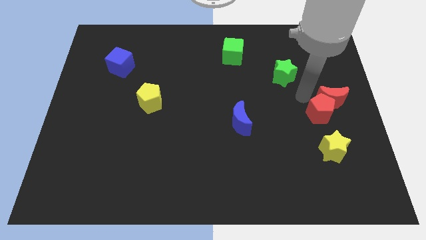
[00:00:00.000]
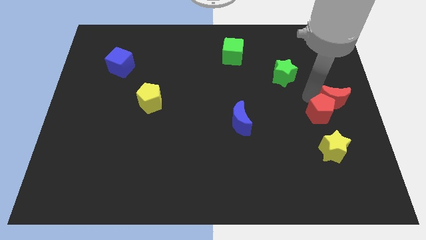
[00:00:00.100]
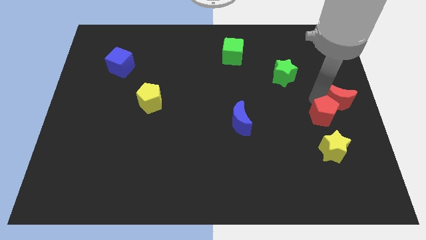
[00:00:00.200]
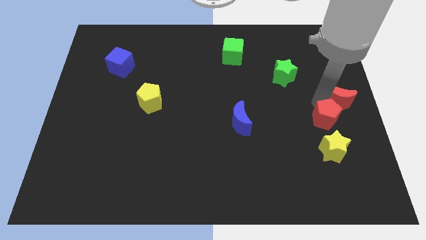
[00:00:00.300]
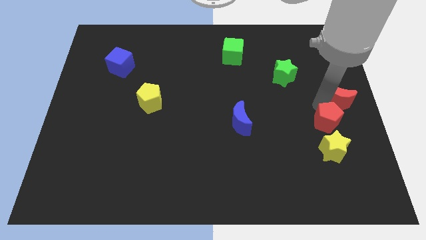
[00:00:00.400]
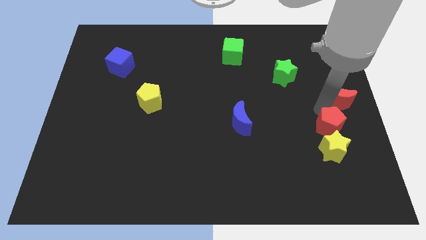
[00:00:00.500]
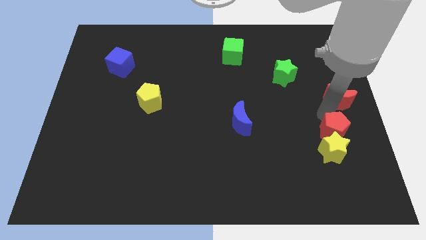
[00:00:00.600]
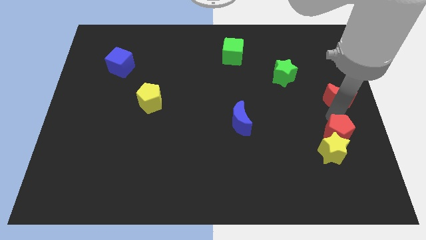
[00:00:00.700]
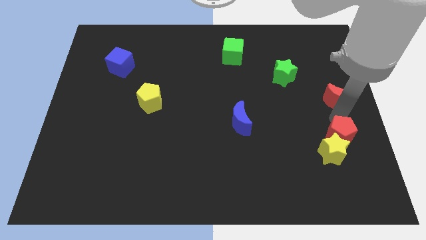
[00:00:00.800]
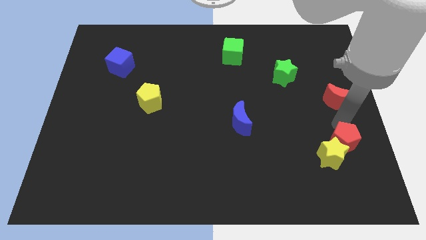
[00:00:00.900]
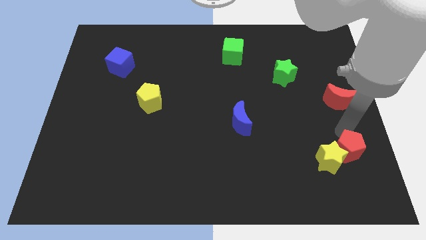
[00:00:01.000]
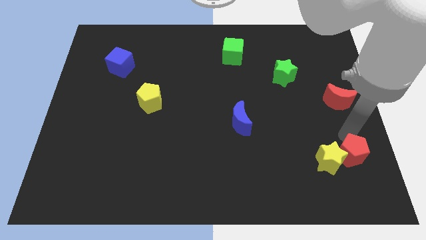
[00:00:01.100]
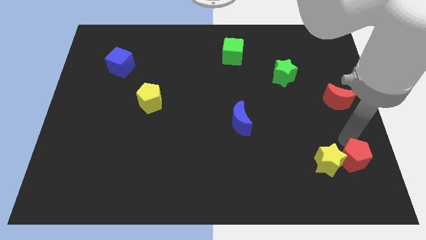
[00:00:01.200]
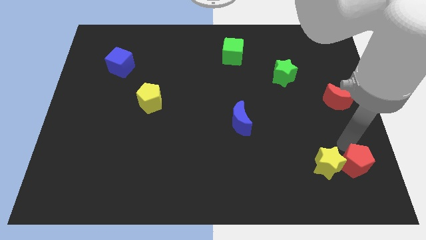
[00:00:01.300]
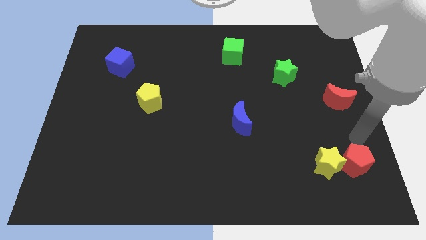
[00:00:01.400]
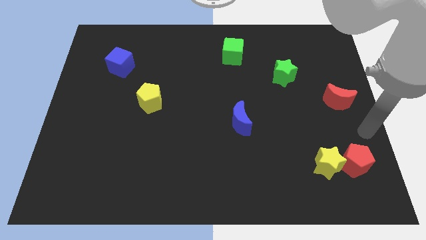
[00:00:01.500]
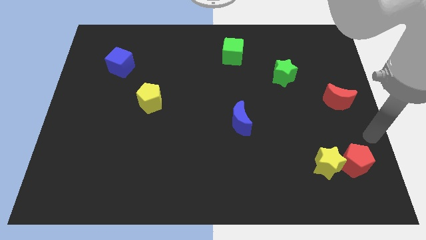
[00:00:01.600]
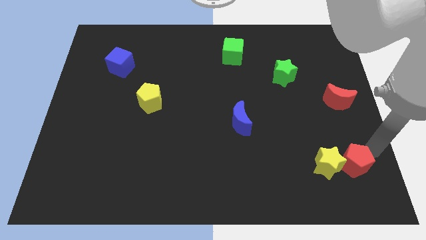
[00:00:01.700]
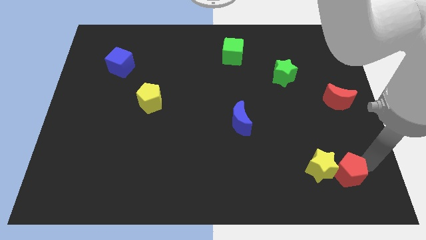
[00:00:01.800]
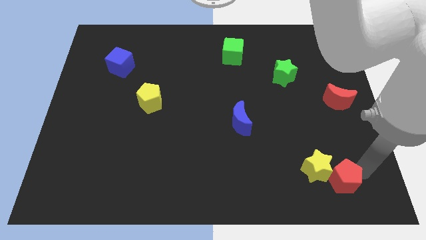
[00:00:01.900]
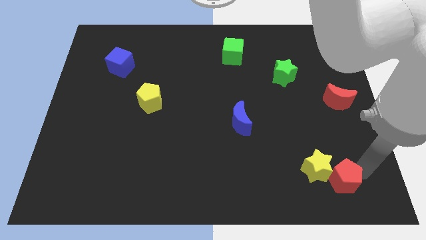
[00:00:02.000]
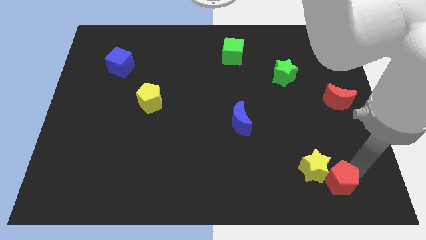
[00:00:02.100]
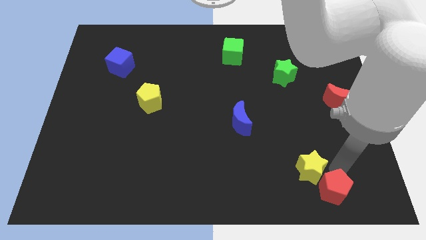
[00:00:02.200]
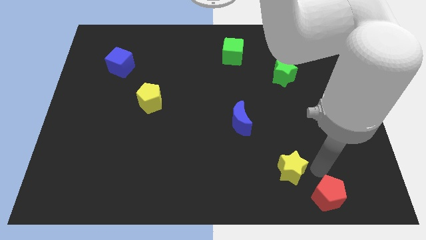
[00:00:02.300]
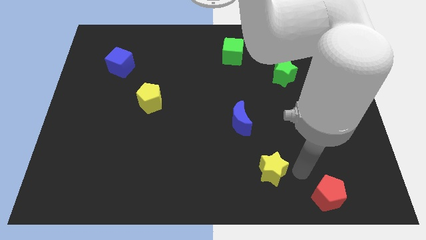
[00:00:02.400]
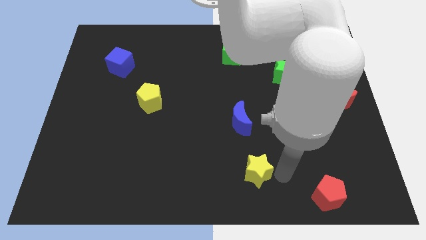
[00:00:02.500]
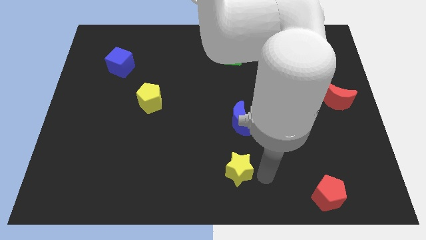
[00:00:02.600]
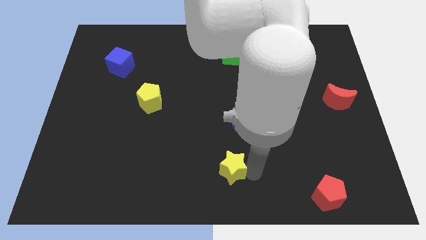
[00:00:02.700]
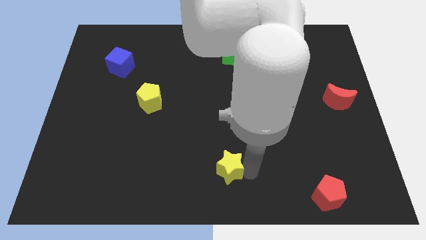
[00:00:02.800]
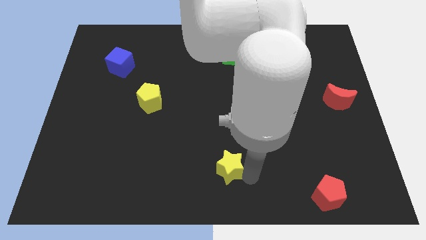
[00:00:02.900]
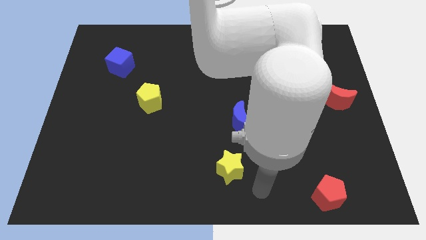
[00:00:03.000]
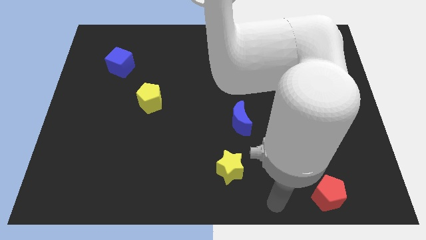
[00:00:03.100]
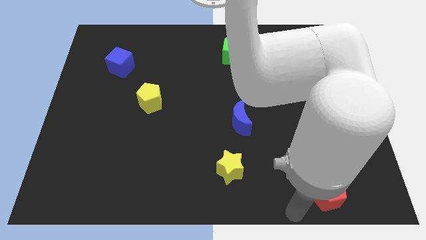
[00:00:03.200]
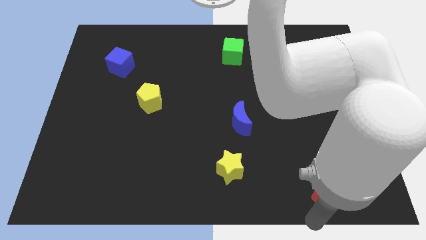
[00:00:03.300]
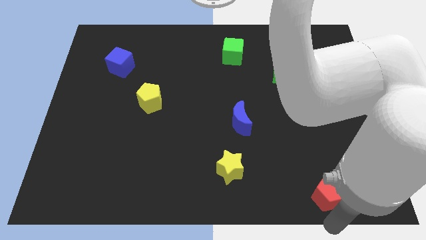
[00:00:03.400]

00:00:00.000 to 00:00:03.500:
place the yellow star down to the blue moon

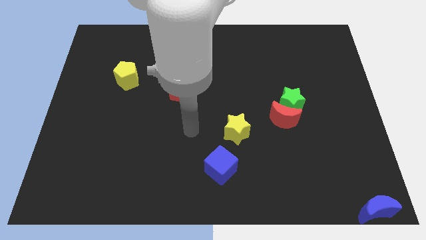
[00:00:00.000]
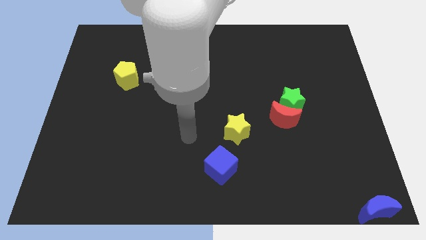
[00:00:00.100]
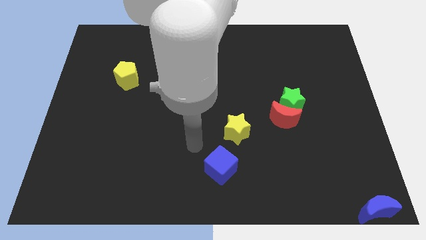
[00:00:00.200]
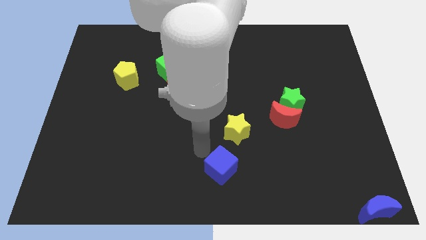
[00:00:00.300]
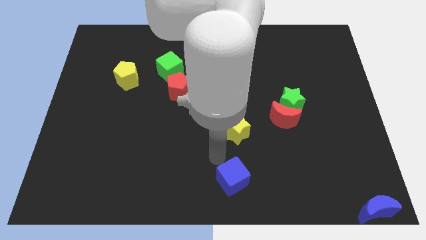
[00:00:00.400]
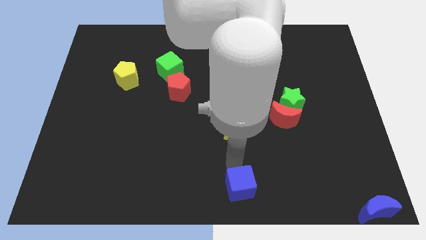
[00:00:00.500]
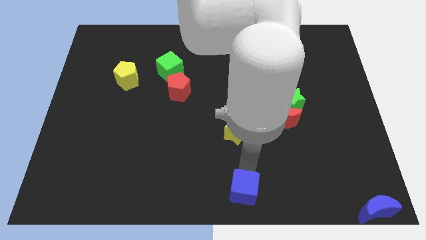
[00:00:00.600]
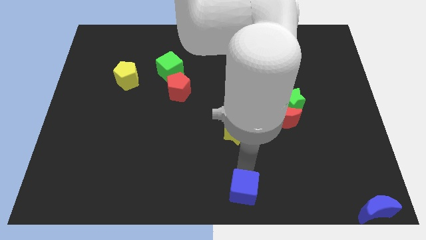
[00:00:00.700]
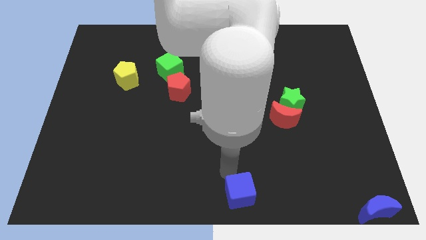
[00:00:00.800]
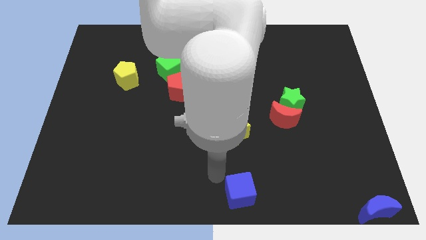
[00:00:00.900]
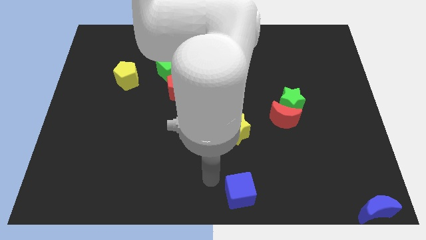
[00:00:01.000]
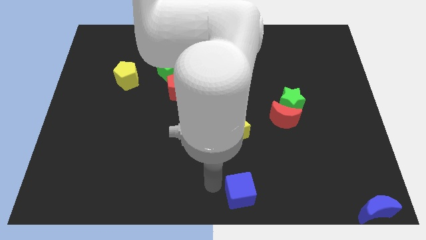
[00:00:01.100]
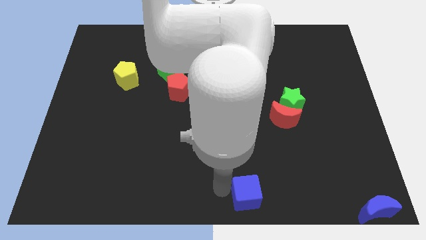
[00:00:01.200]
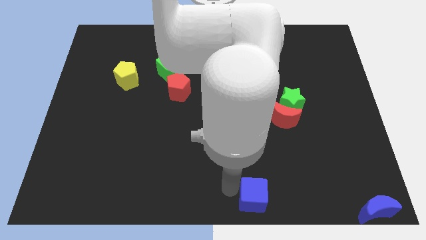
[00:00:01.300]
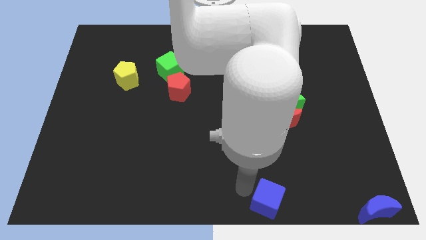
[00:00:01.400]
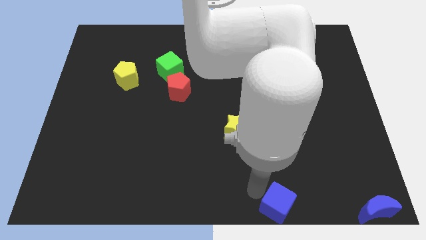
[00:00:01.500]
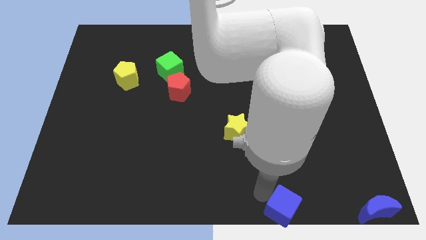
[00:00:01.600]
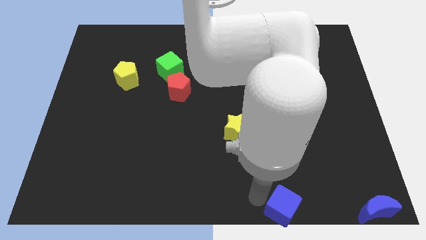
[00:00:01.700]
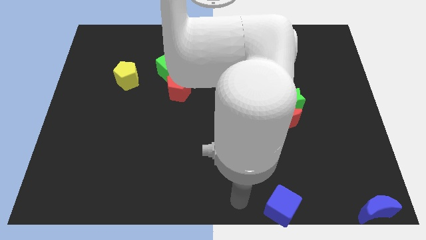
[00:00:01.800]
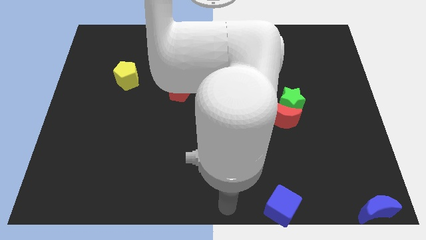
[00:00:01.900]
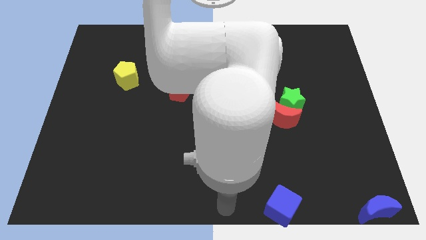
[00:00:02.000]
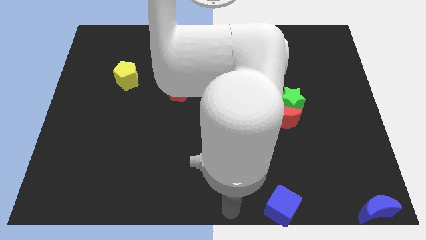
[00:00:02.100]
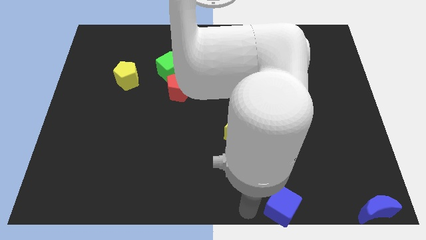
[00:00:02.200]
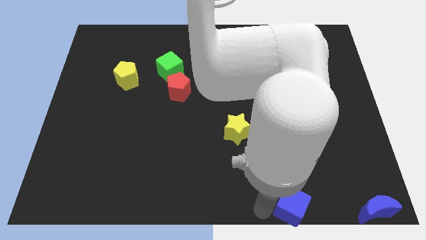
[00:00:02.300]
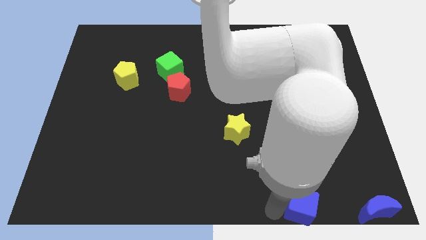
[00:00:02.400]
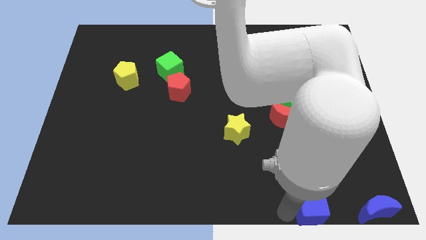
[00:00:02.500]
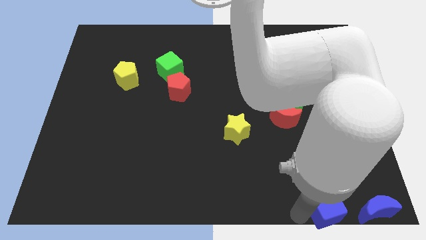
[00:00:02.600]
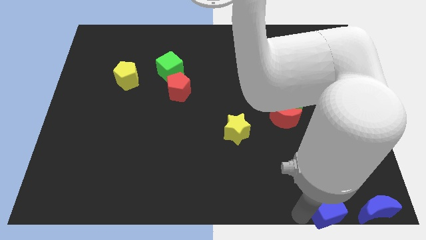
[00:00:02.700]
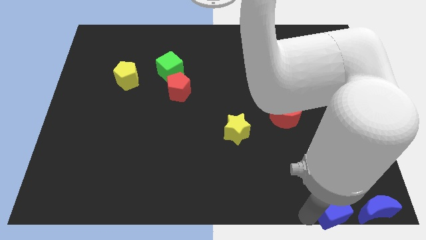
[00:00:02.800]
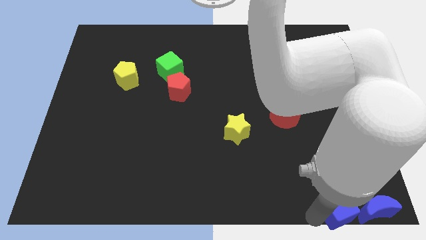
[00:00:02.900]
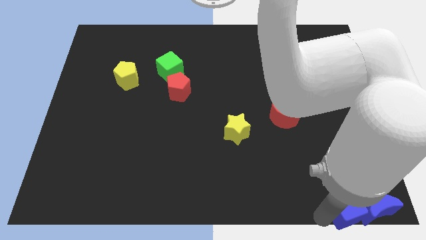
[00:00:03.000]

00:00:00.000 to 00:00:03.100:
move the blue cube towards the blue crescent

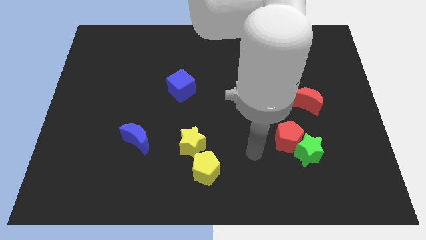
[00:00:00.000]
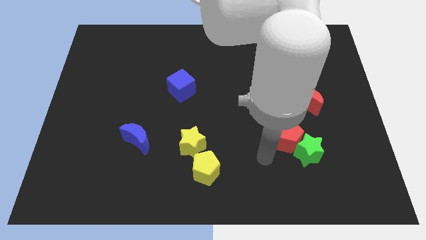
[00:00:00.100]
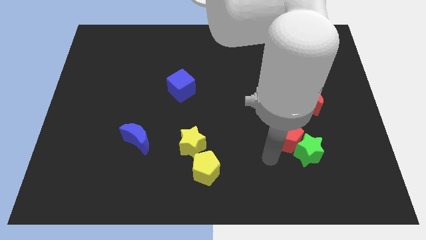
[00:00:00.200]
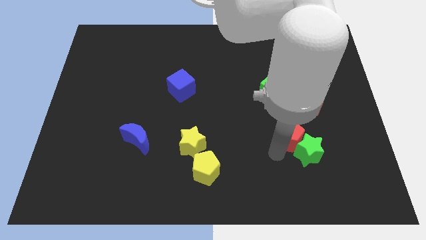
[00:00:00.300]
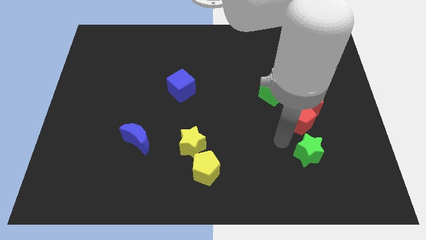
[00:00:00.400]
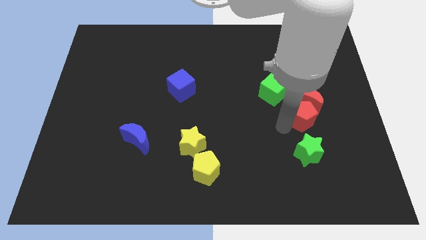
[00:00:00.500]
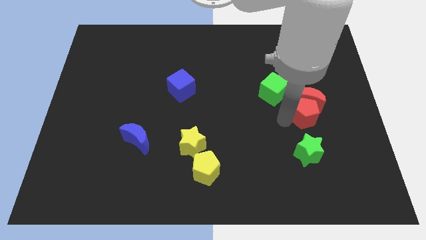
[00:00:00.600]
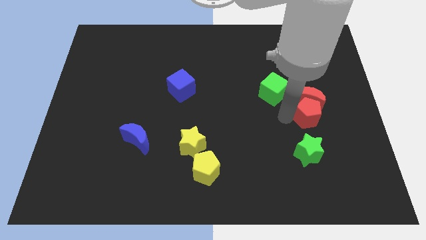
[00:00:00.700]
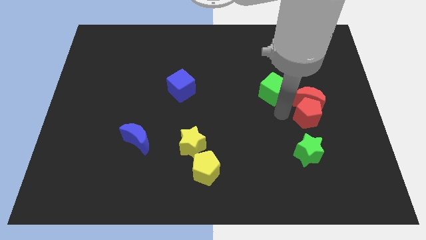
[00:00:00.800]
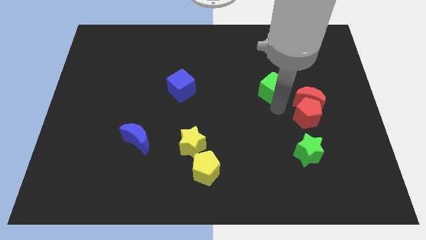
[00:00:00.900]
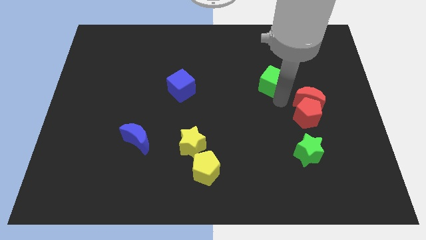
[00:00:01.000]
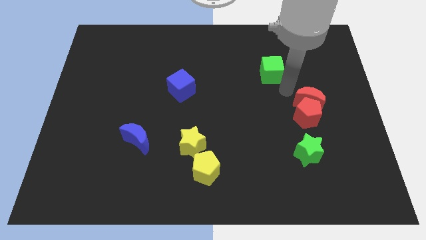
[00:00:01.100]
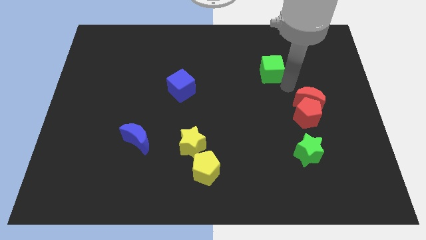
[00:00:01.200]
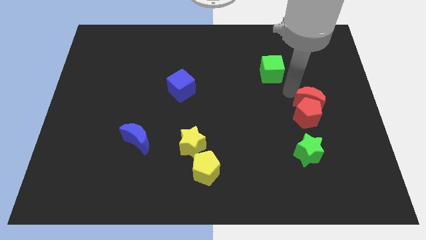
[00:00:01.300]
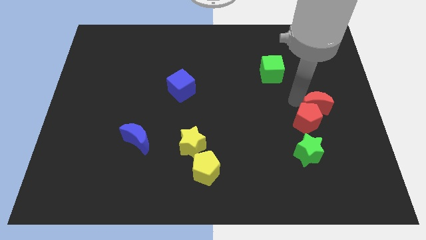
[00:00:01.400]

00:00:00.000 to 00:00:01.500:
slightly move the red pentagon up

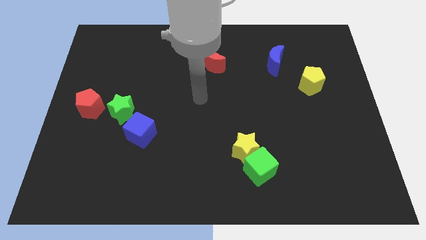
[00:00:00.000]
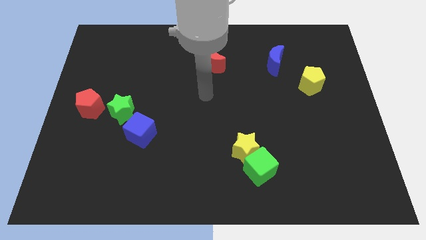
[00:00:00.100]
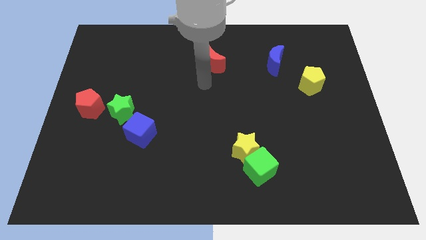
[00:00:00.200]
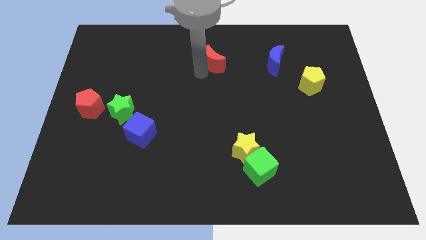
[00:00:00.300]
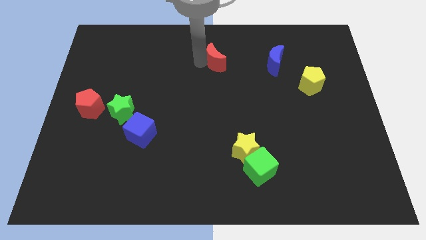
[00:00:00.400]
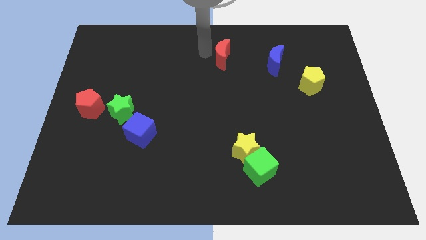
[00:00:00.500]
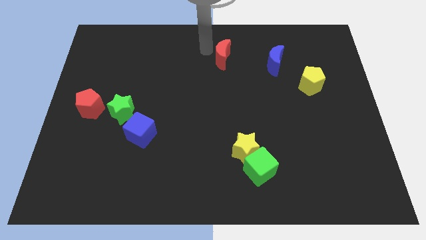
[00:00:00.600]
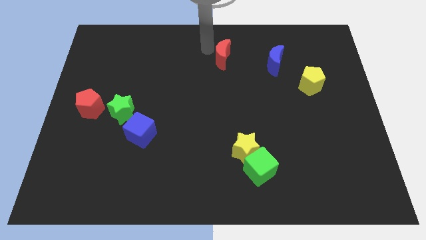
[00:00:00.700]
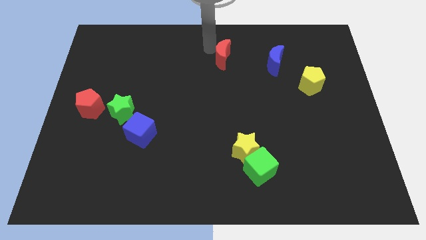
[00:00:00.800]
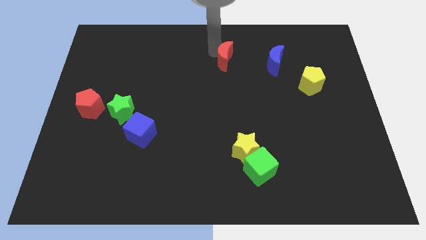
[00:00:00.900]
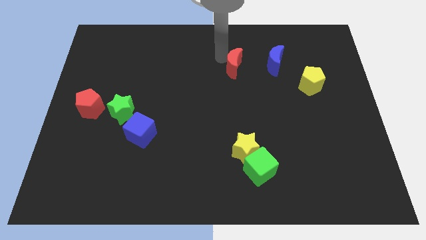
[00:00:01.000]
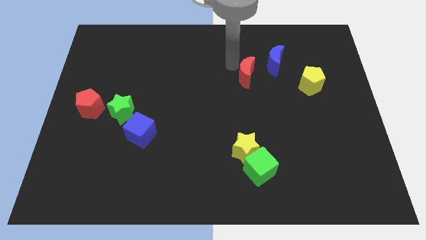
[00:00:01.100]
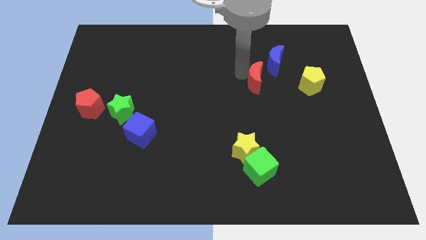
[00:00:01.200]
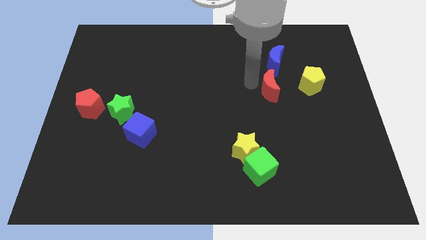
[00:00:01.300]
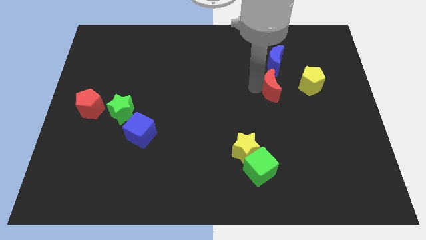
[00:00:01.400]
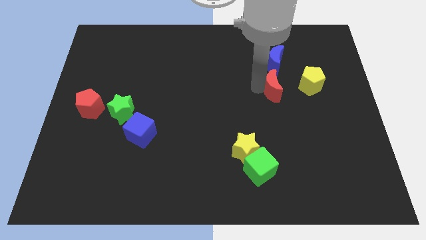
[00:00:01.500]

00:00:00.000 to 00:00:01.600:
push red crescent below blue crescent
